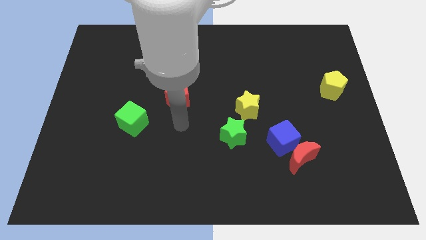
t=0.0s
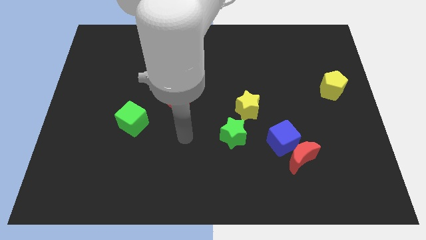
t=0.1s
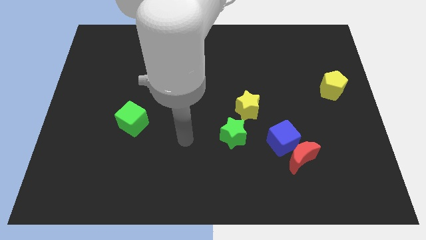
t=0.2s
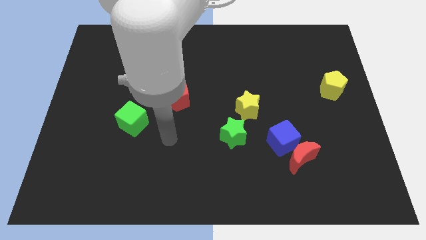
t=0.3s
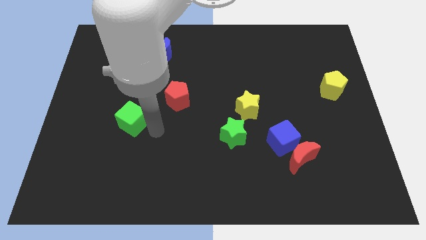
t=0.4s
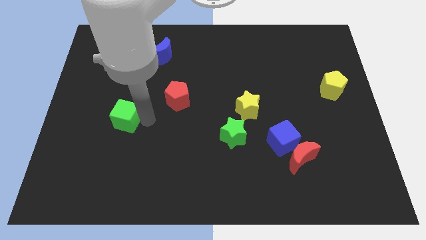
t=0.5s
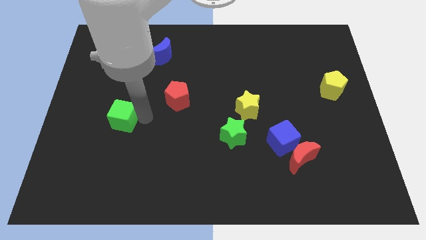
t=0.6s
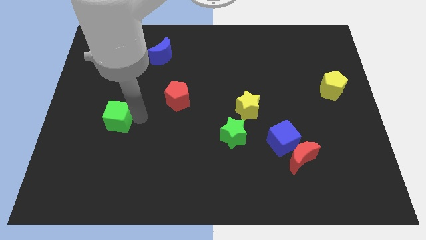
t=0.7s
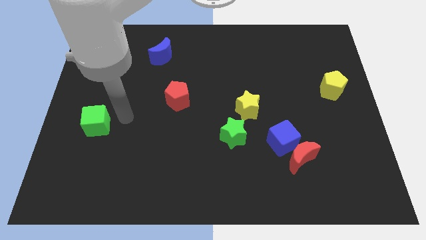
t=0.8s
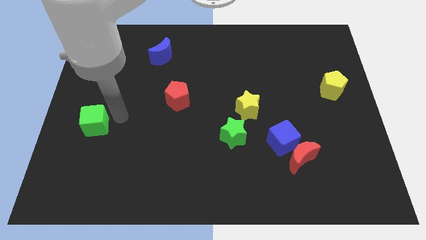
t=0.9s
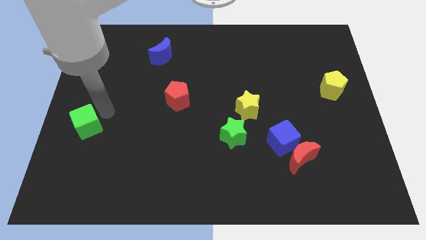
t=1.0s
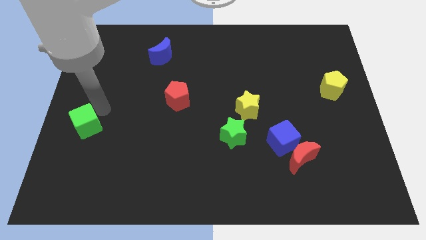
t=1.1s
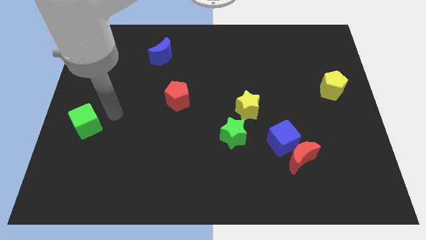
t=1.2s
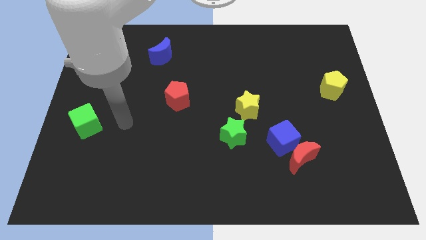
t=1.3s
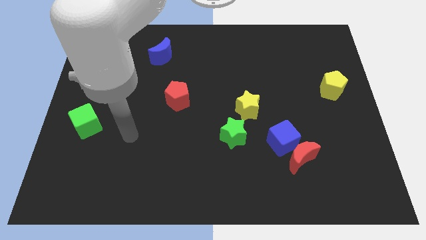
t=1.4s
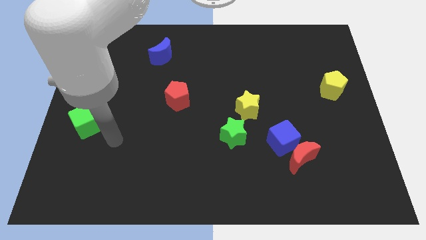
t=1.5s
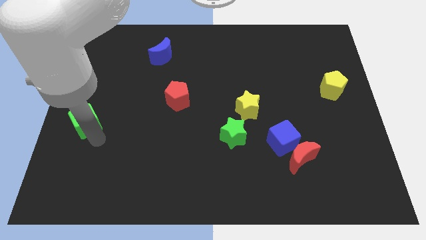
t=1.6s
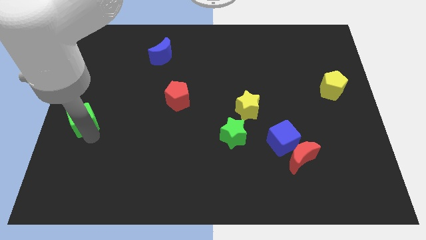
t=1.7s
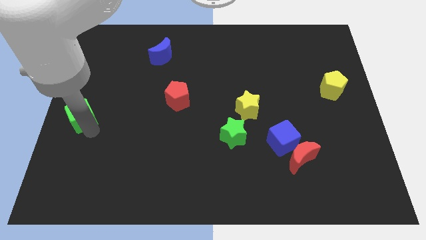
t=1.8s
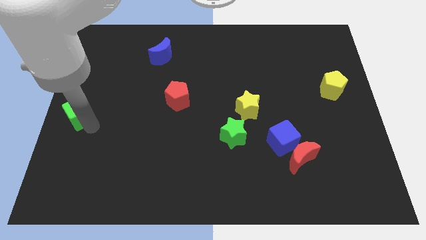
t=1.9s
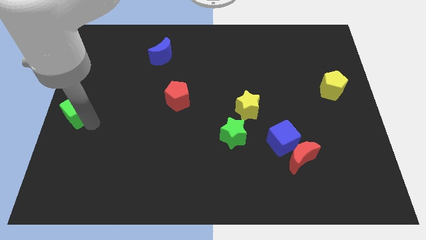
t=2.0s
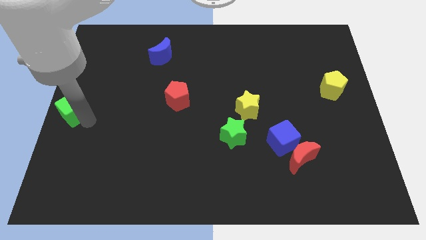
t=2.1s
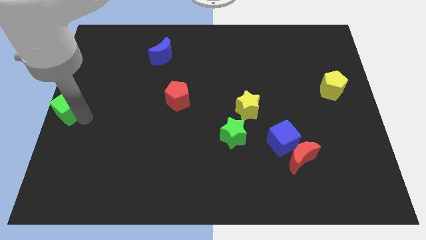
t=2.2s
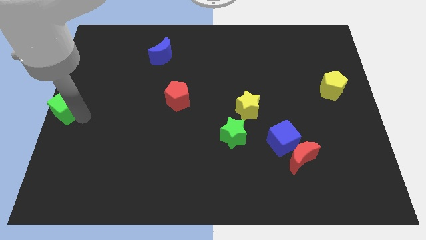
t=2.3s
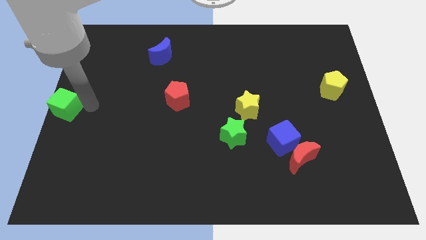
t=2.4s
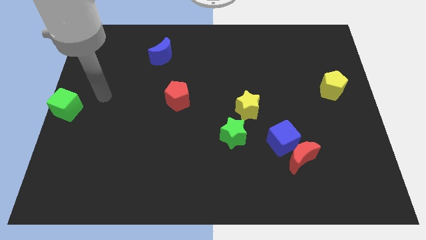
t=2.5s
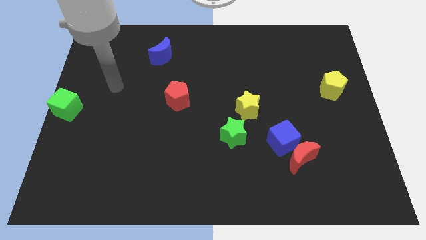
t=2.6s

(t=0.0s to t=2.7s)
place the green cube to the center left of the board

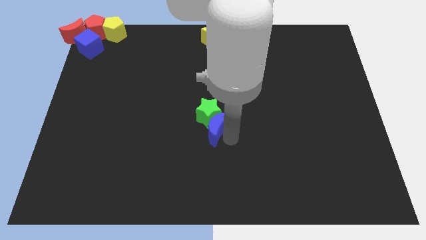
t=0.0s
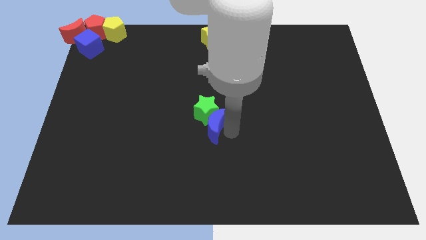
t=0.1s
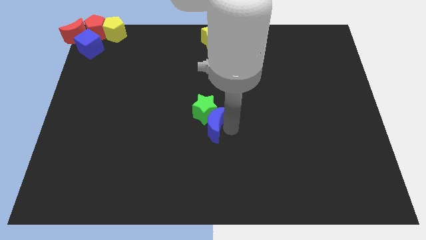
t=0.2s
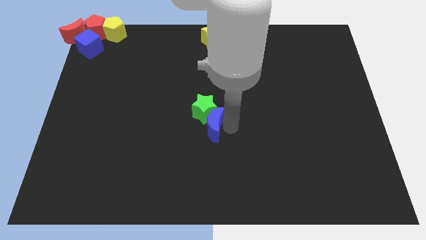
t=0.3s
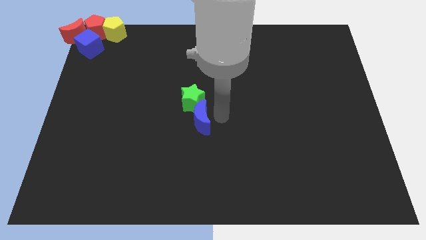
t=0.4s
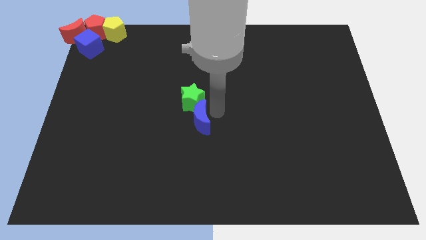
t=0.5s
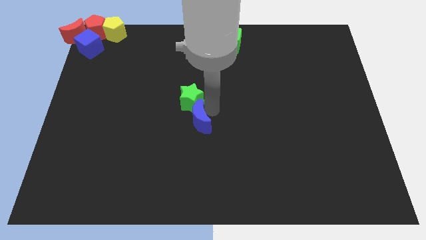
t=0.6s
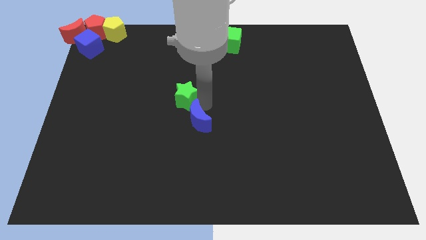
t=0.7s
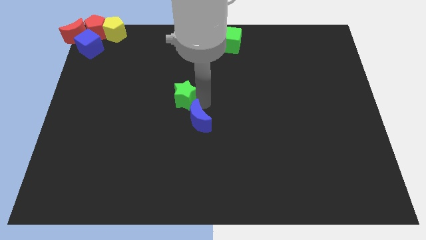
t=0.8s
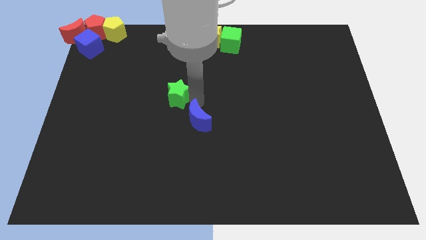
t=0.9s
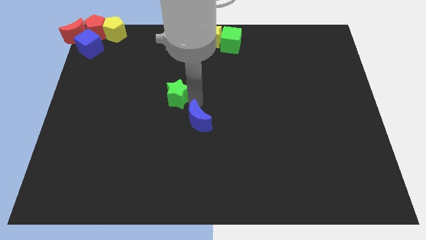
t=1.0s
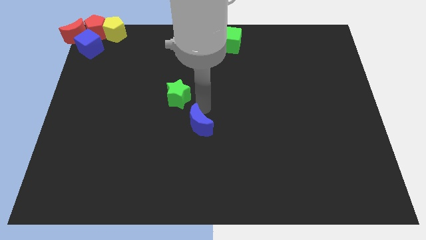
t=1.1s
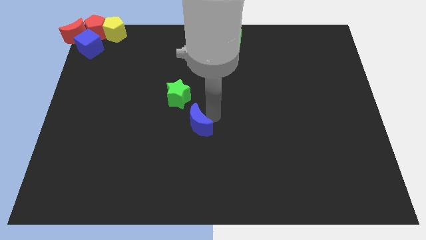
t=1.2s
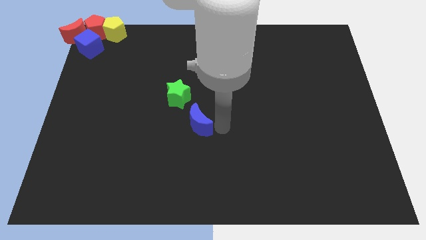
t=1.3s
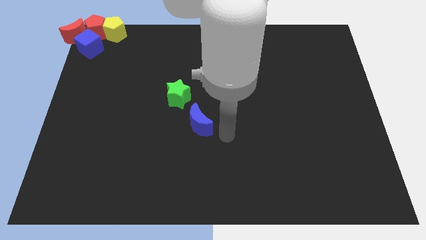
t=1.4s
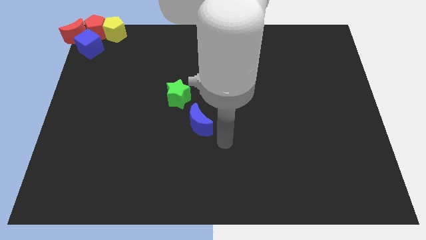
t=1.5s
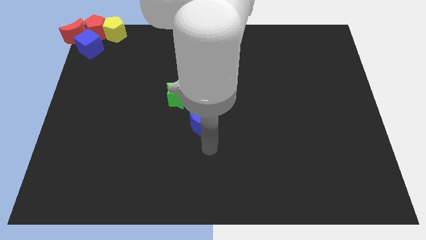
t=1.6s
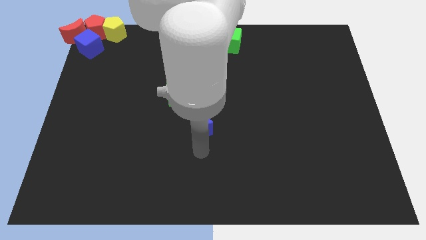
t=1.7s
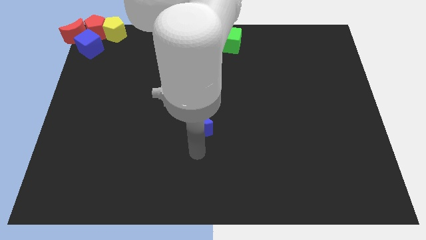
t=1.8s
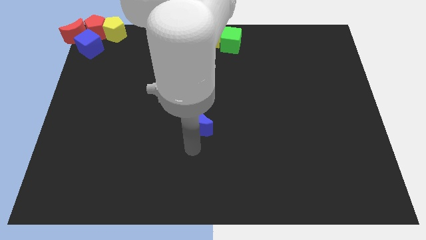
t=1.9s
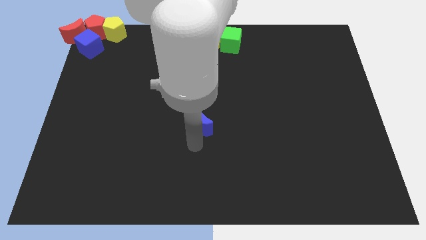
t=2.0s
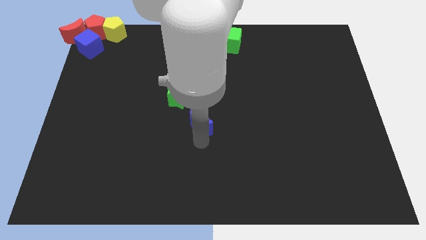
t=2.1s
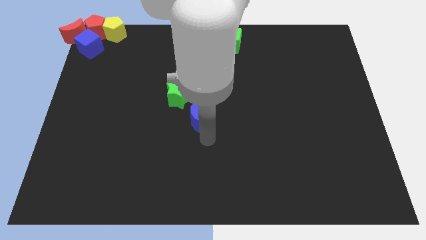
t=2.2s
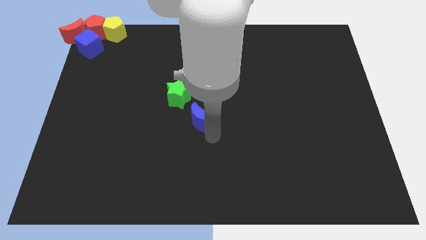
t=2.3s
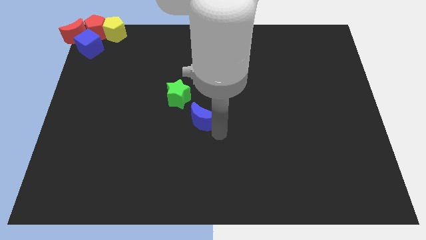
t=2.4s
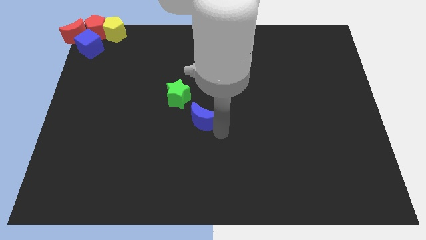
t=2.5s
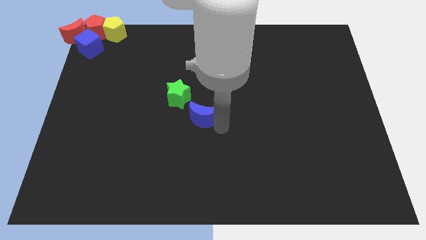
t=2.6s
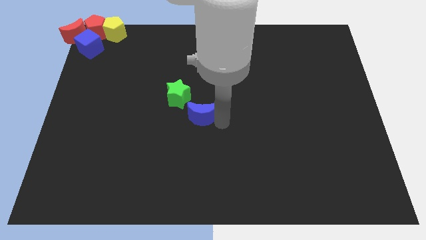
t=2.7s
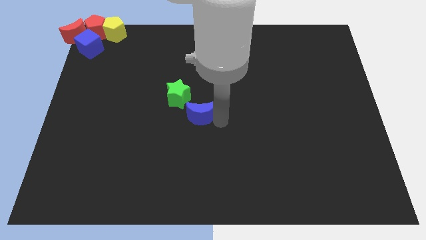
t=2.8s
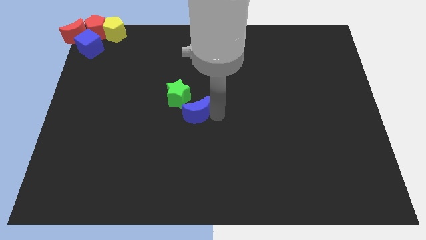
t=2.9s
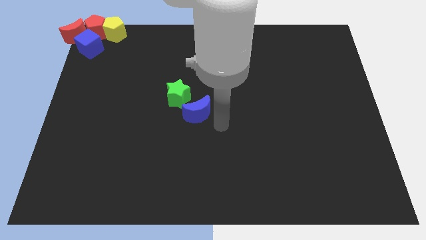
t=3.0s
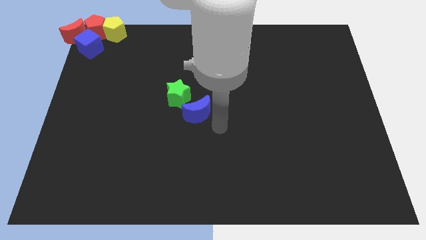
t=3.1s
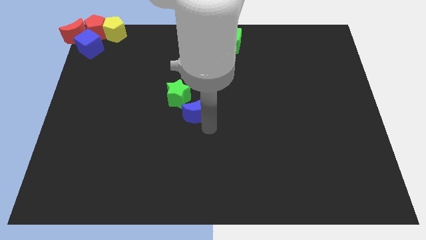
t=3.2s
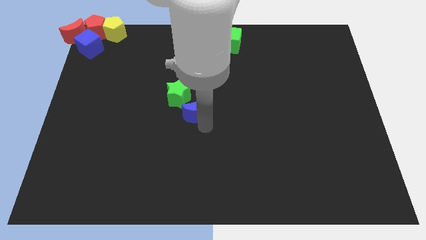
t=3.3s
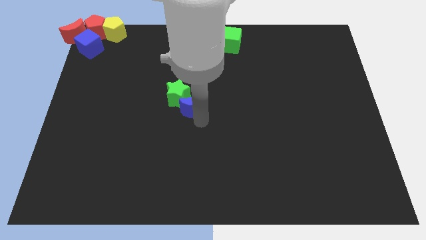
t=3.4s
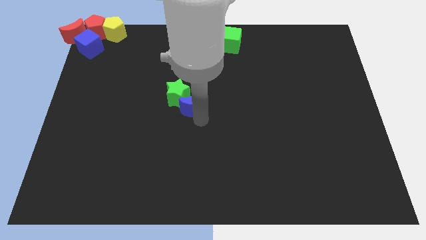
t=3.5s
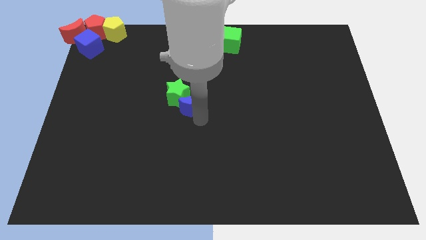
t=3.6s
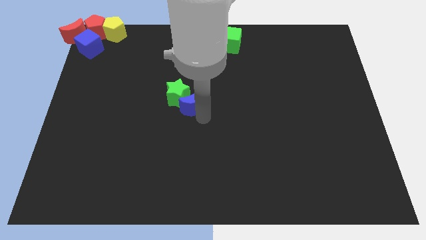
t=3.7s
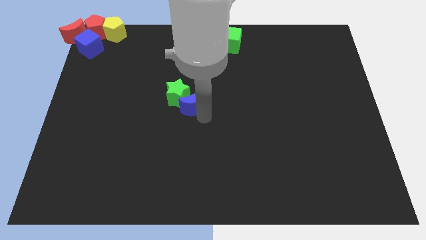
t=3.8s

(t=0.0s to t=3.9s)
push the blue crescent below the green star

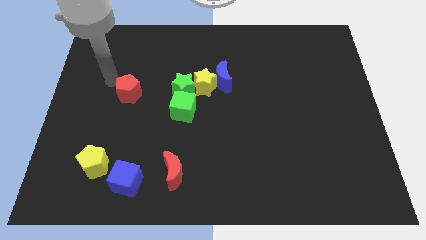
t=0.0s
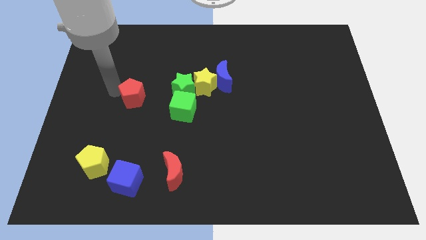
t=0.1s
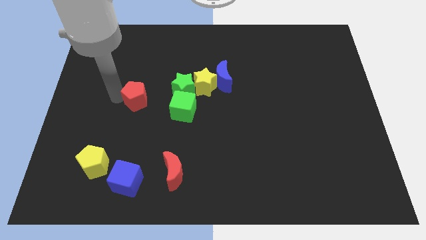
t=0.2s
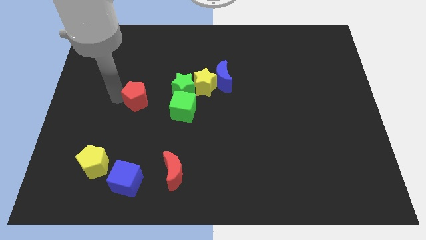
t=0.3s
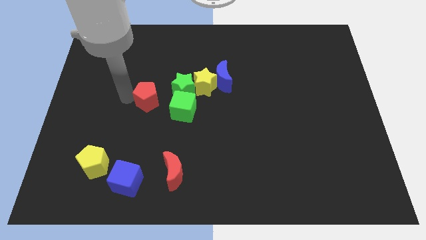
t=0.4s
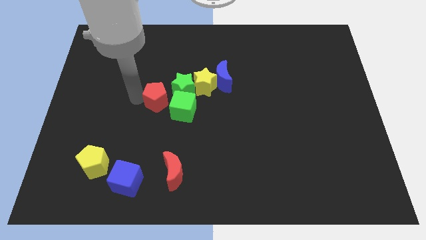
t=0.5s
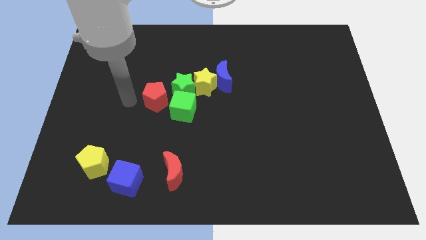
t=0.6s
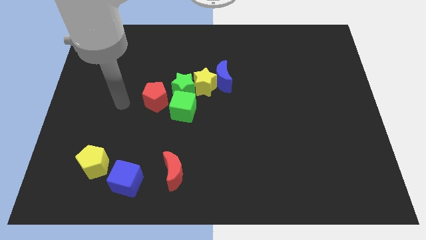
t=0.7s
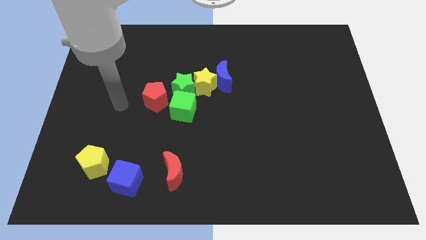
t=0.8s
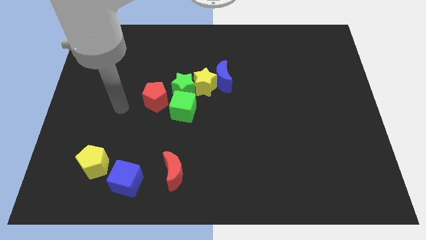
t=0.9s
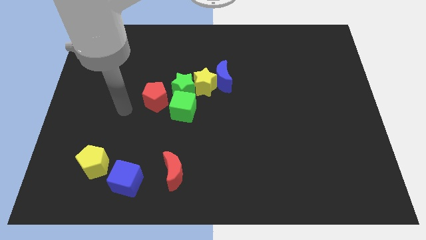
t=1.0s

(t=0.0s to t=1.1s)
place red pentagon to the left of the green cube

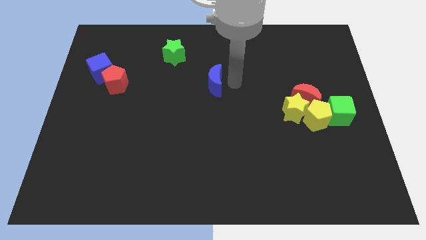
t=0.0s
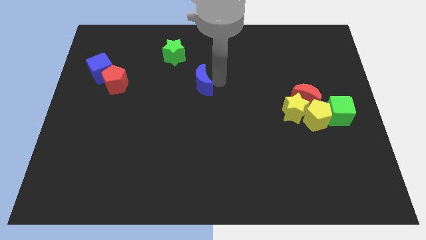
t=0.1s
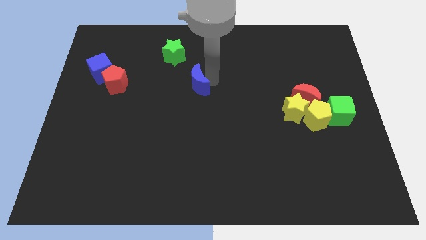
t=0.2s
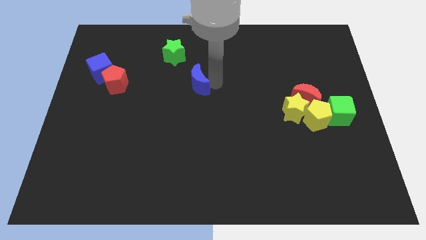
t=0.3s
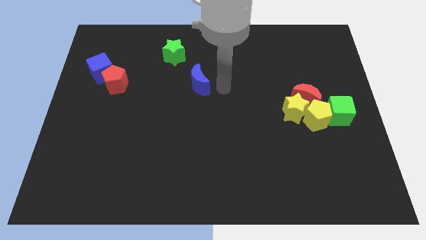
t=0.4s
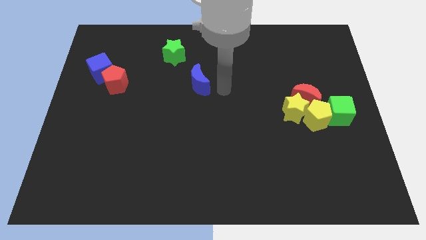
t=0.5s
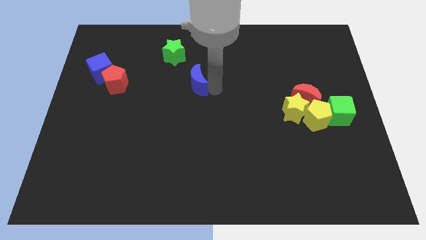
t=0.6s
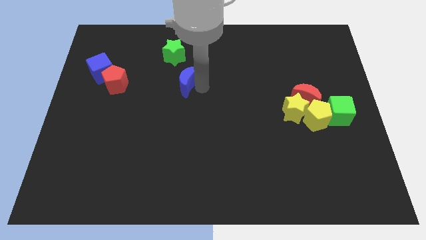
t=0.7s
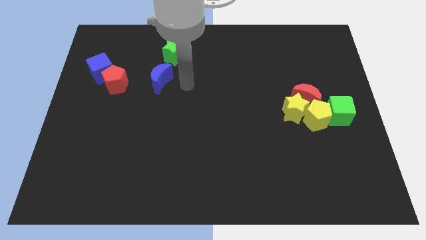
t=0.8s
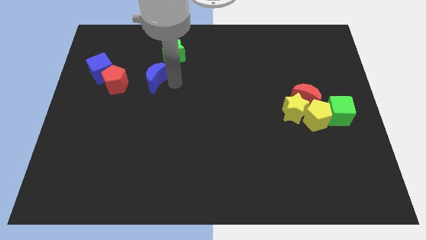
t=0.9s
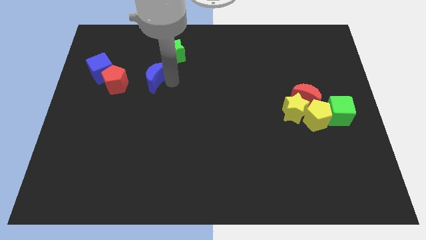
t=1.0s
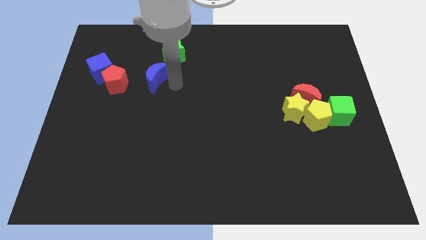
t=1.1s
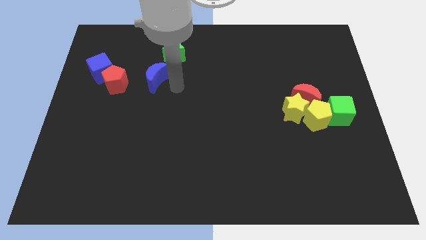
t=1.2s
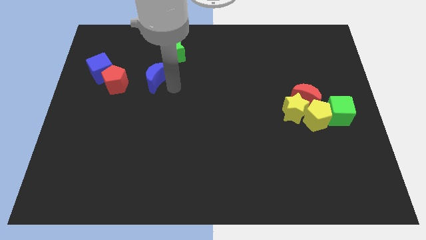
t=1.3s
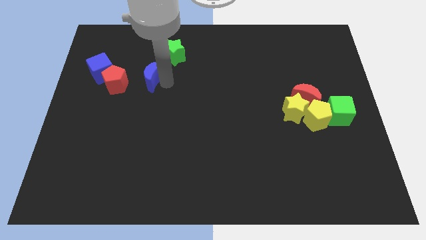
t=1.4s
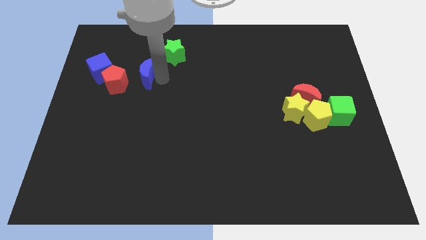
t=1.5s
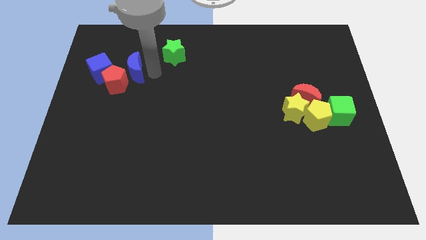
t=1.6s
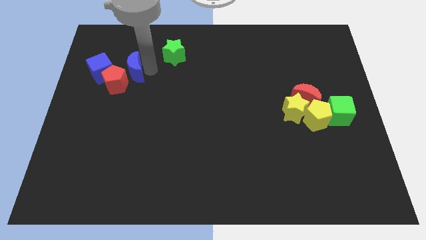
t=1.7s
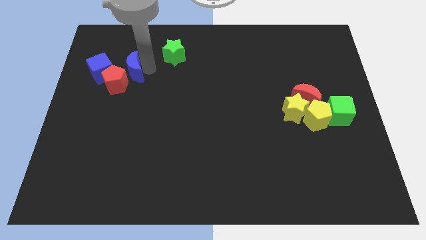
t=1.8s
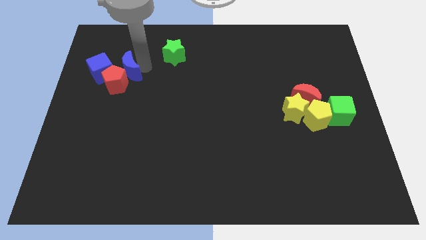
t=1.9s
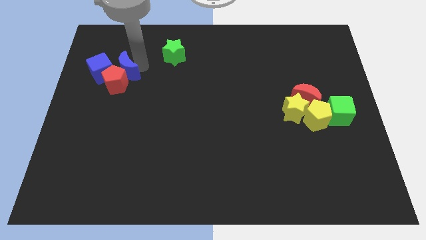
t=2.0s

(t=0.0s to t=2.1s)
slide blue moon into red pentagon
